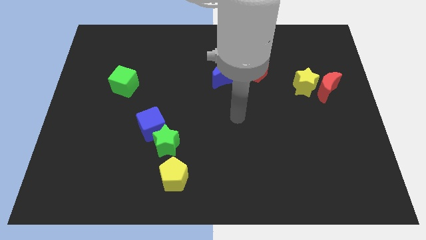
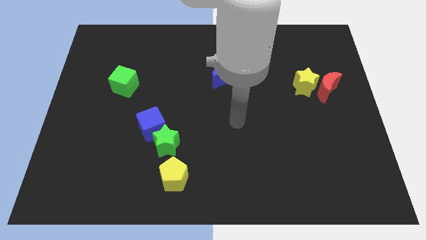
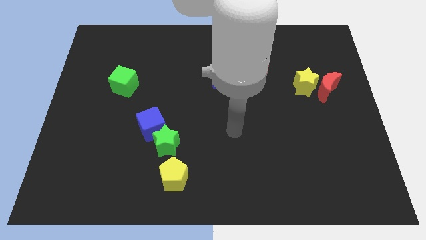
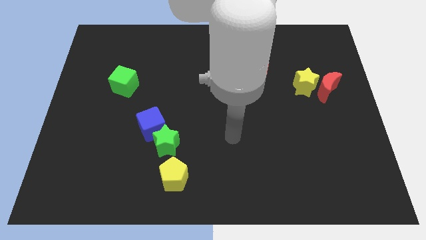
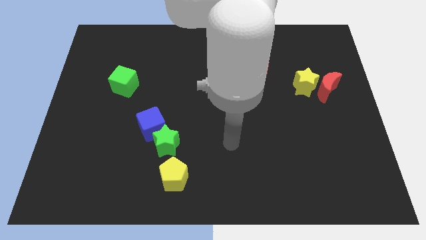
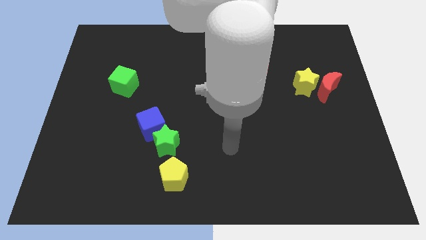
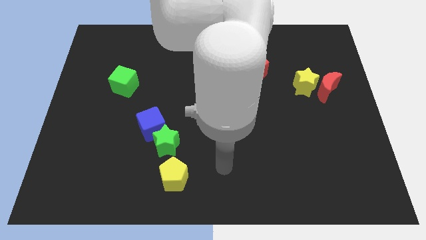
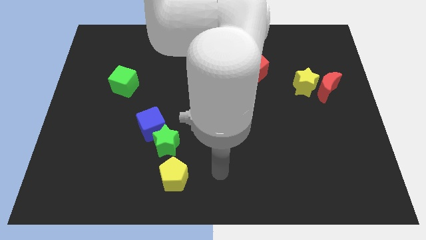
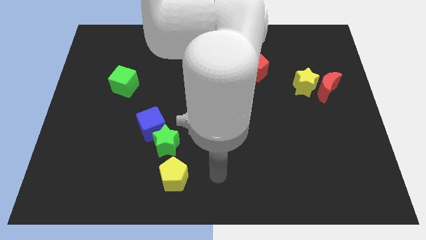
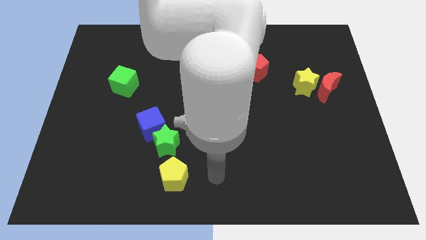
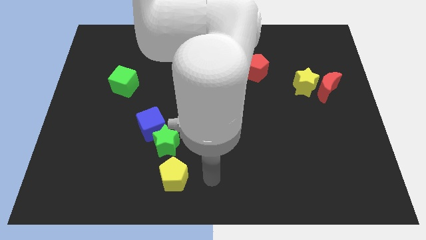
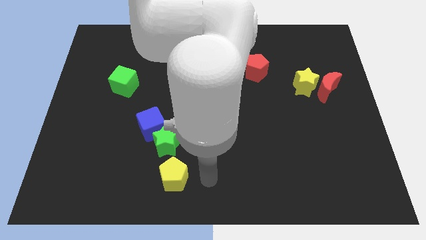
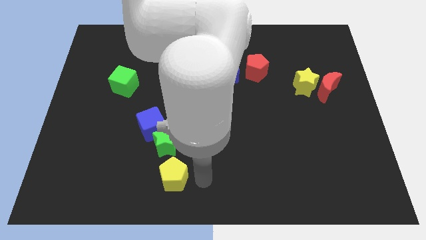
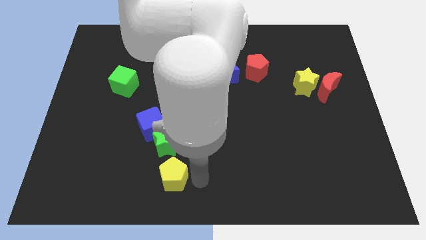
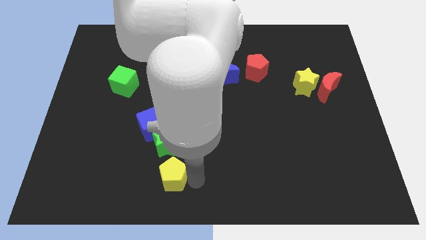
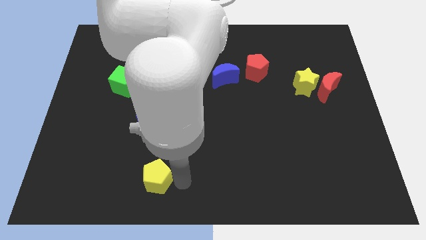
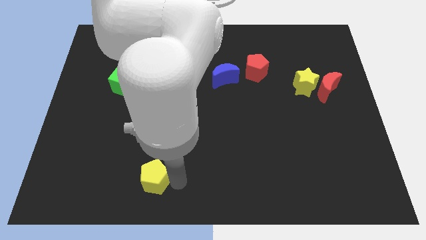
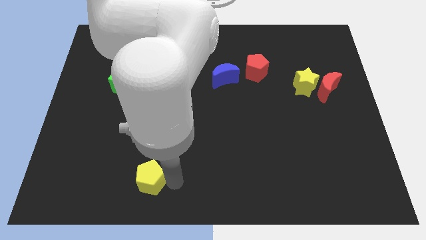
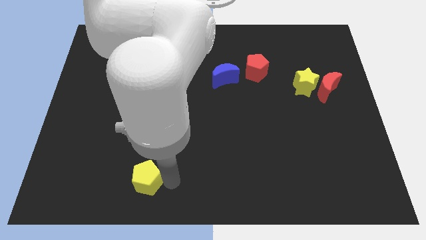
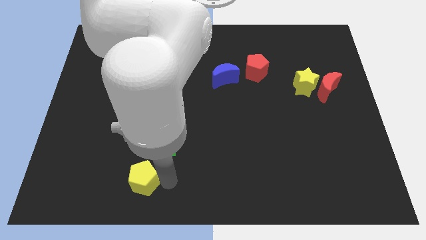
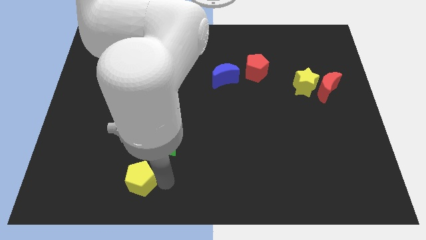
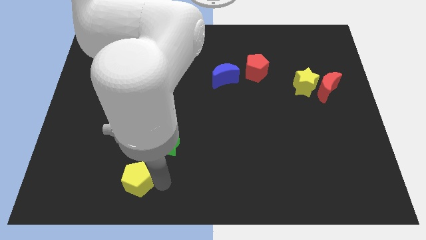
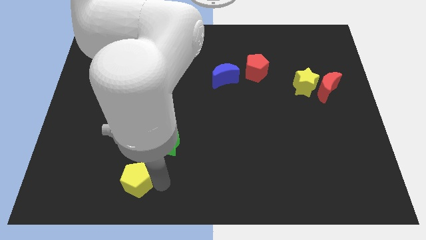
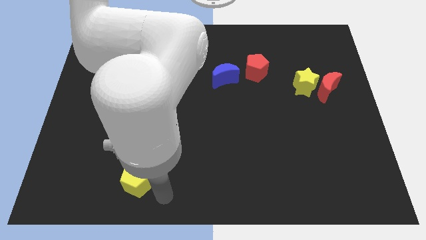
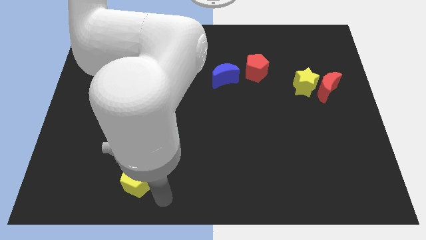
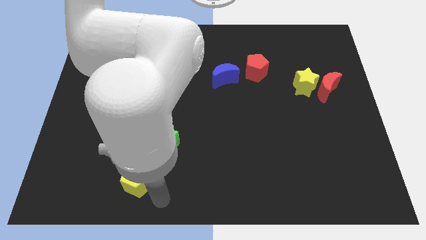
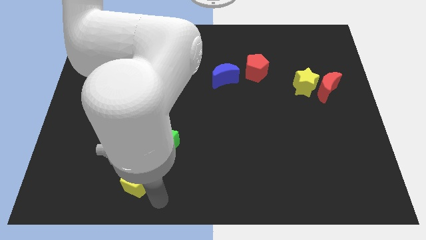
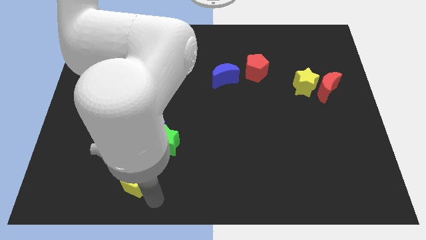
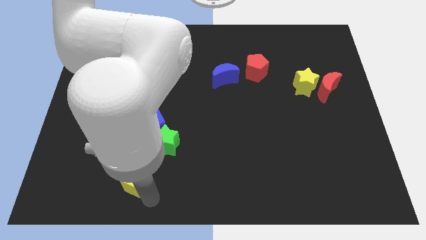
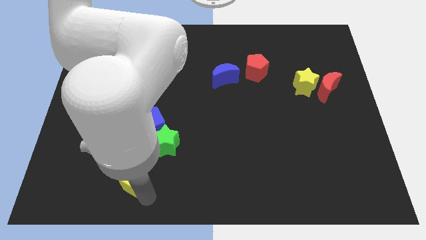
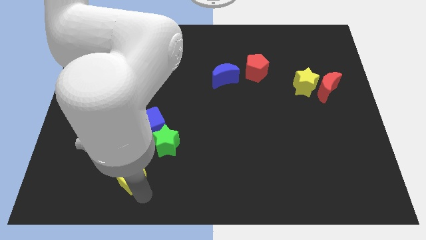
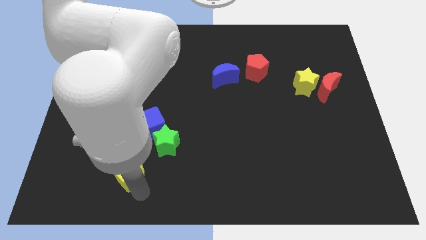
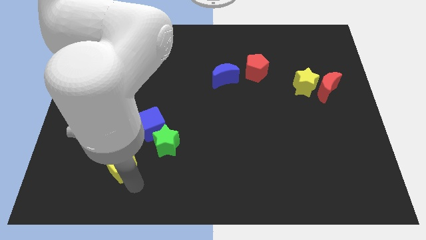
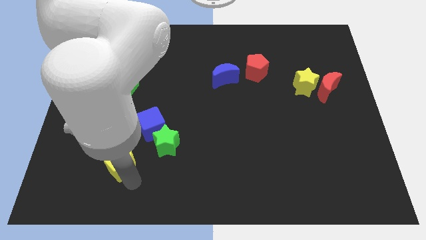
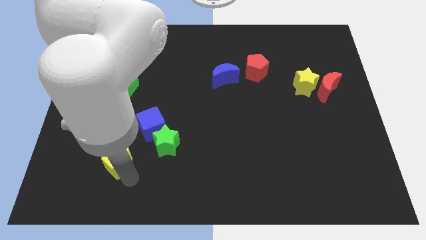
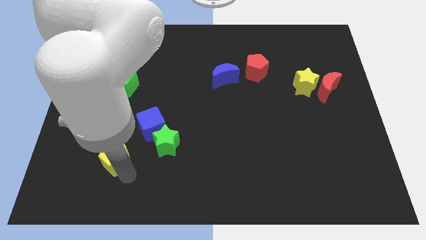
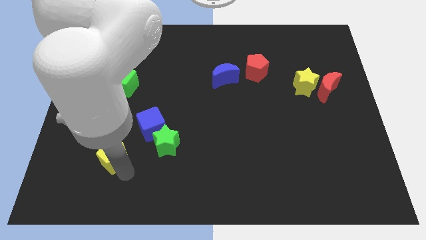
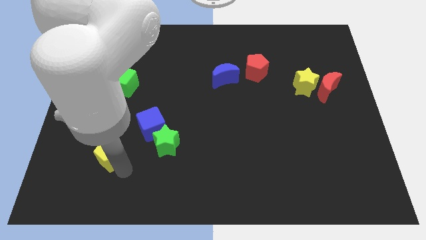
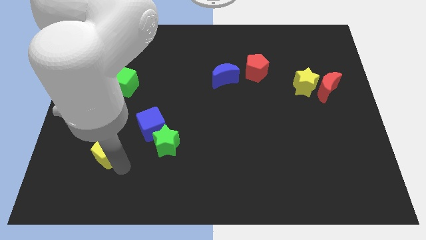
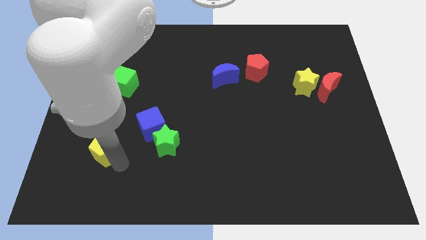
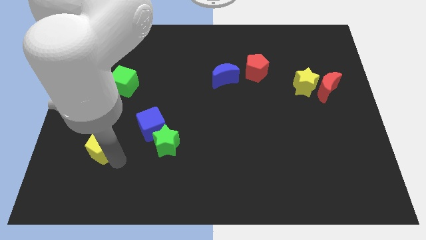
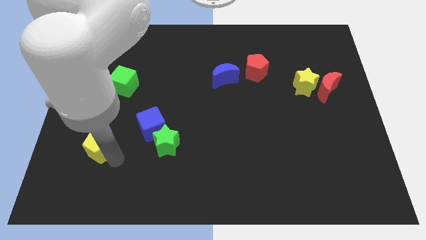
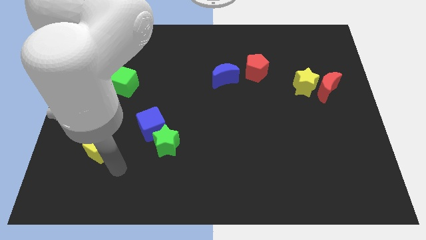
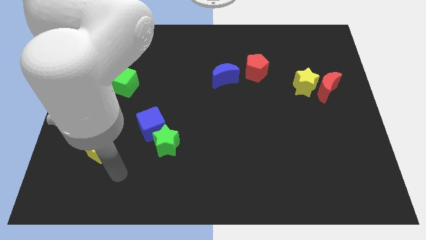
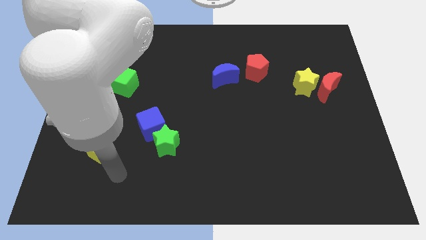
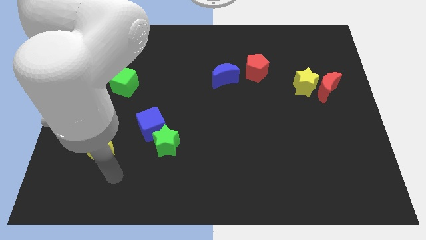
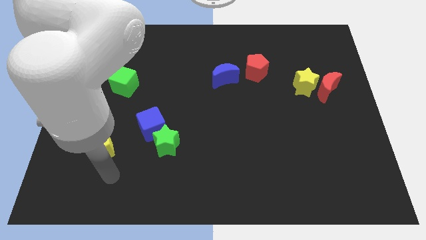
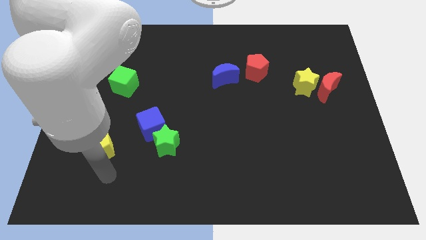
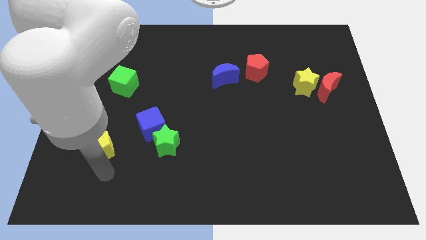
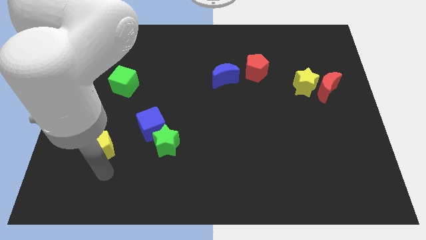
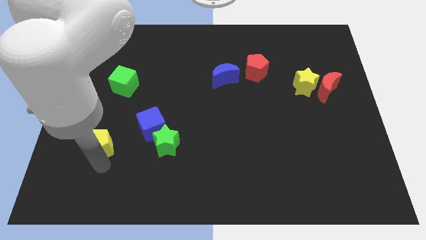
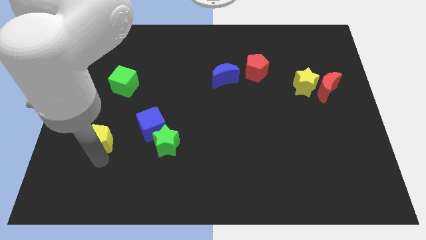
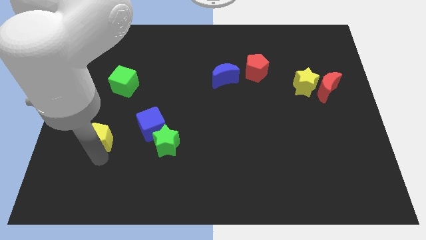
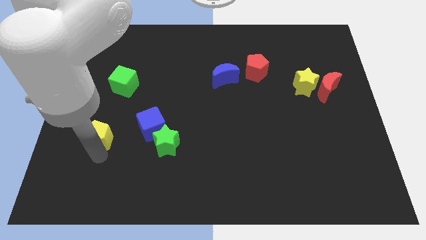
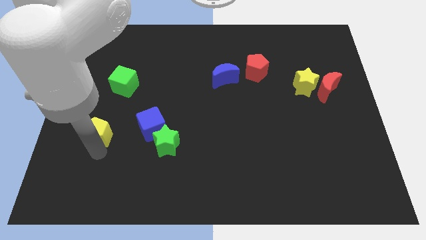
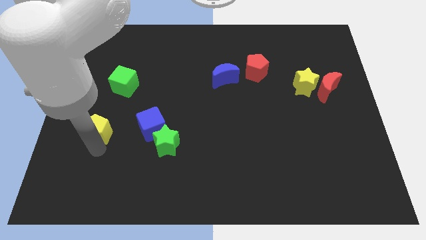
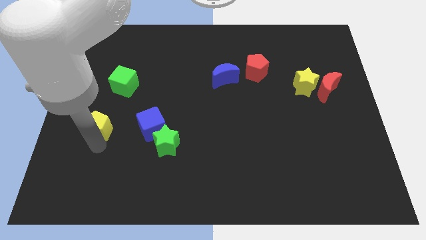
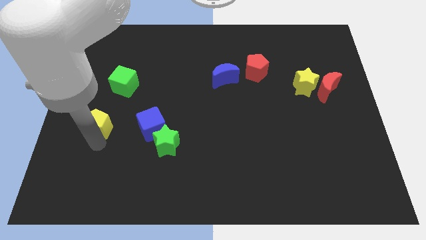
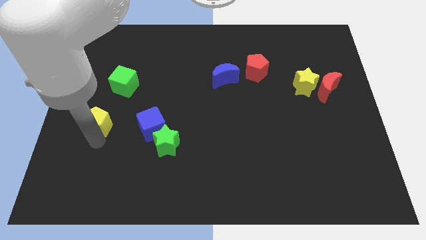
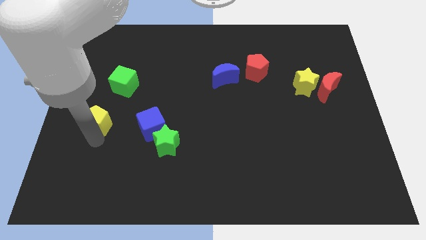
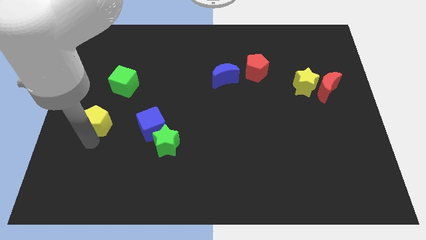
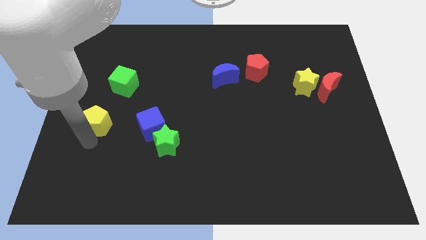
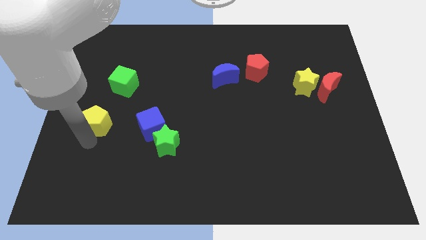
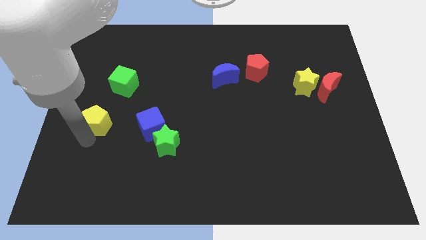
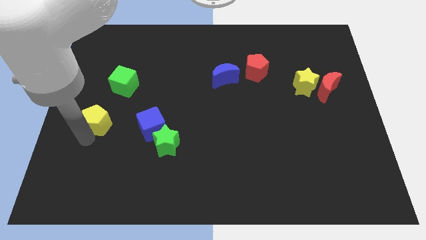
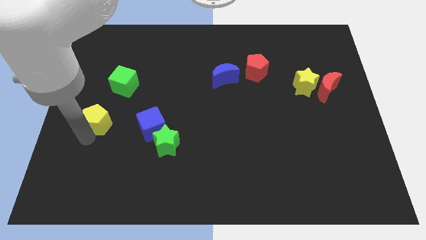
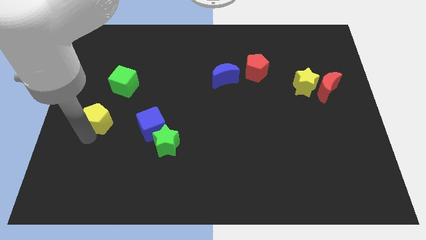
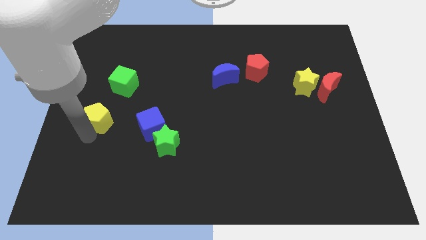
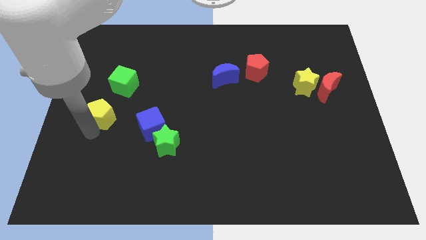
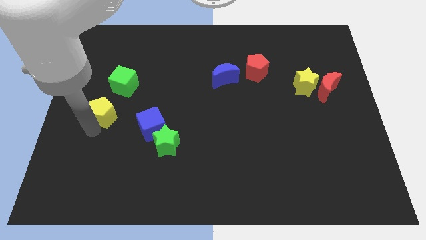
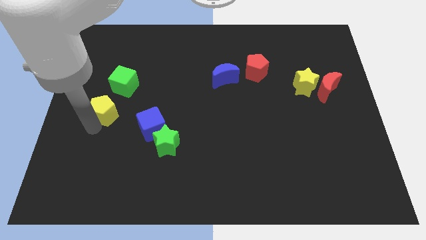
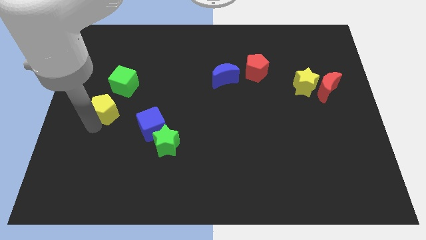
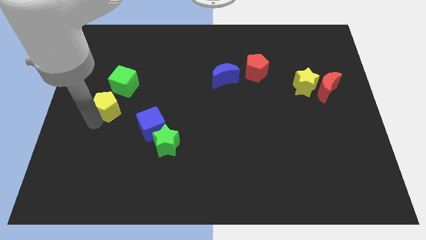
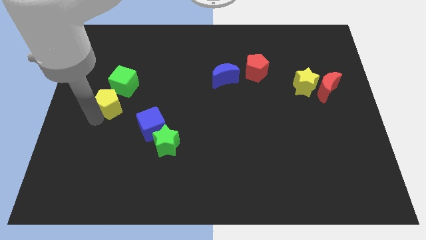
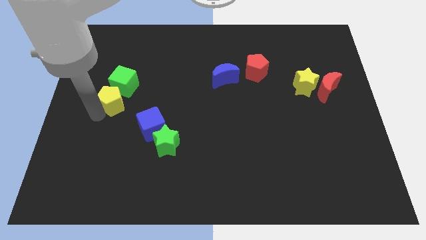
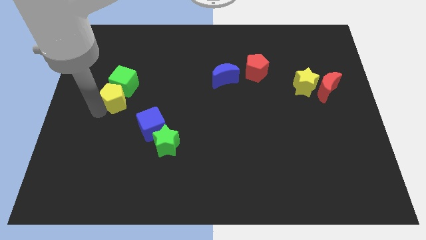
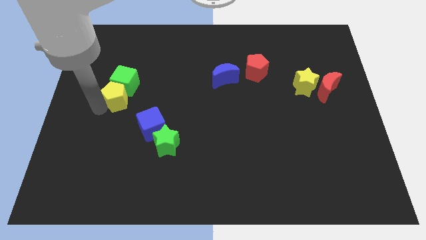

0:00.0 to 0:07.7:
push the yellow pentagon next to the green cube

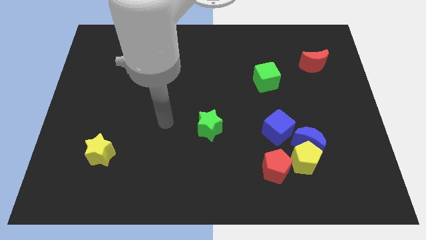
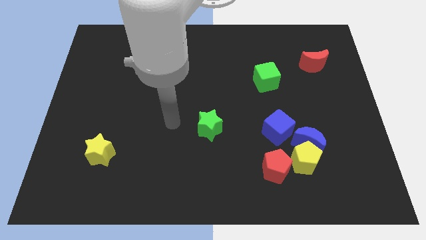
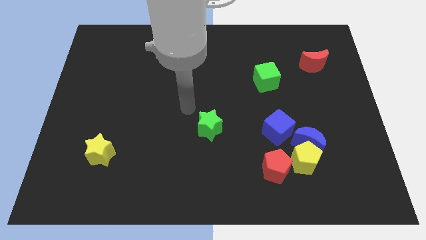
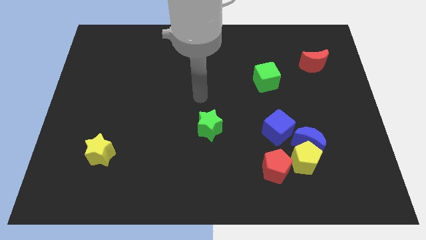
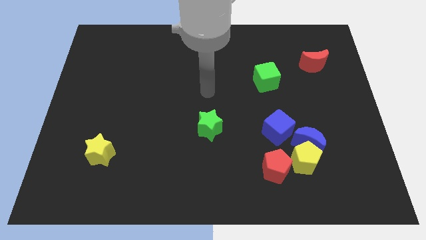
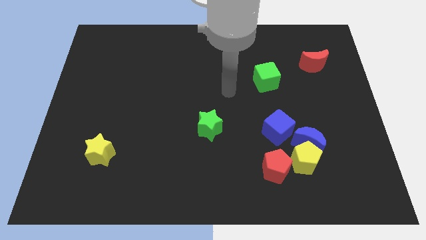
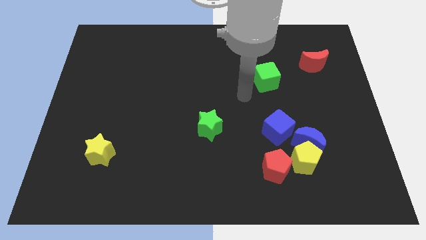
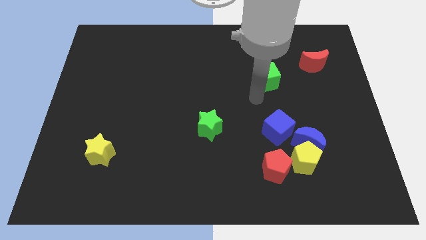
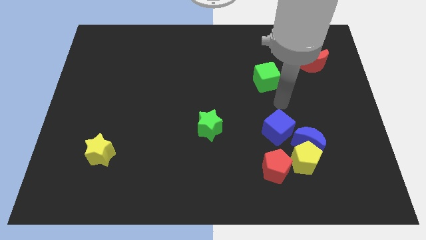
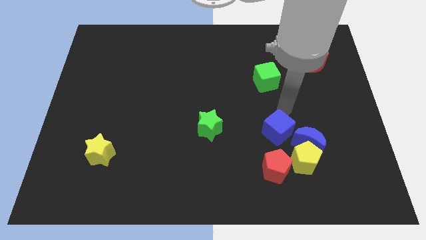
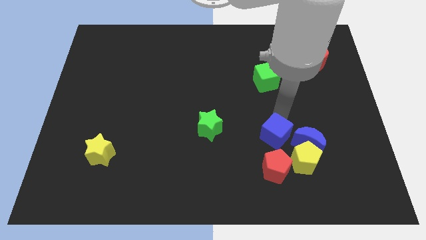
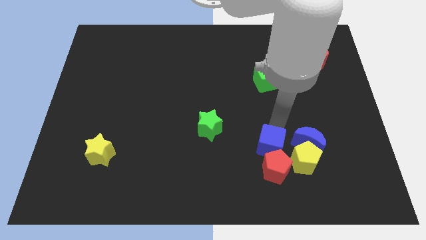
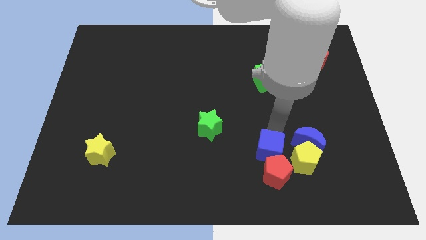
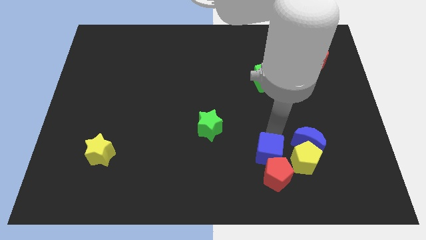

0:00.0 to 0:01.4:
slide the blue cube towards the red pentagon
